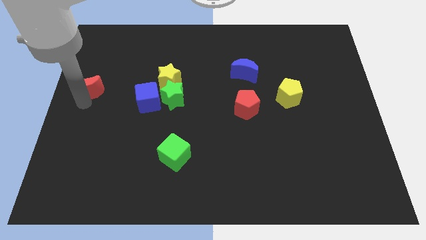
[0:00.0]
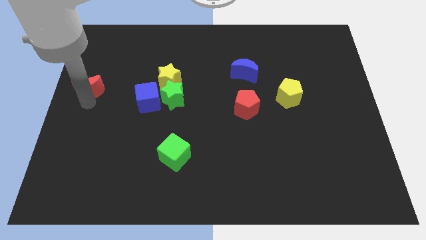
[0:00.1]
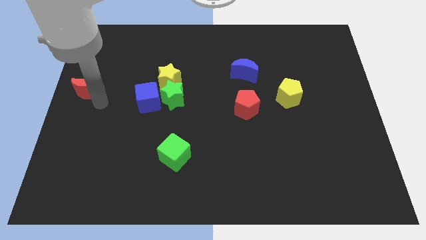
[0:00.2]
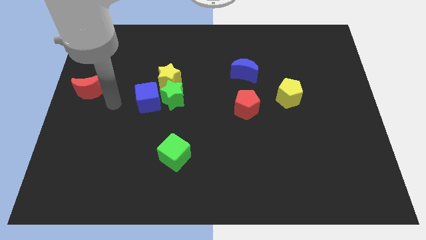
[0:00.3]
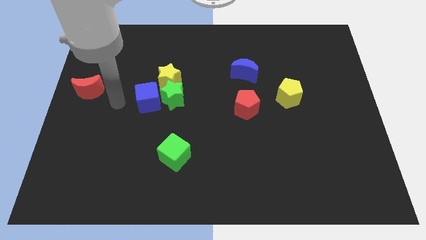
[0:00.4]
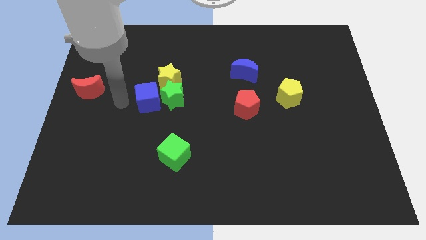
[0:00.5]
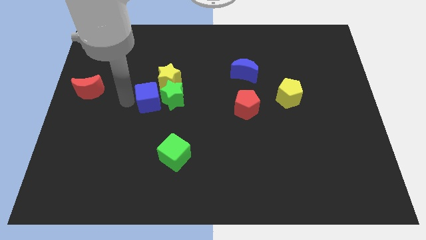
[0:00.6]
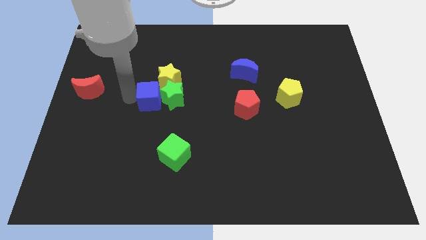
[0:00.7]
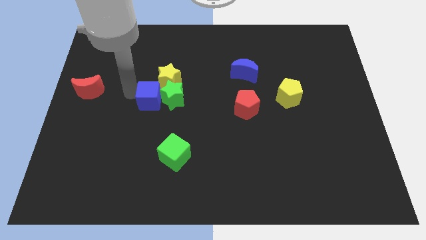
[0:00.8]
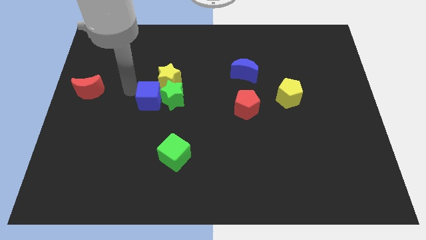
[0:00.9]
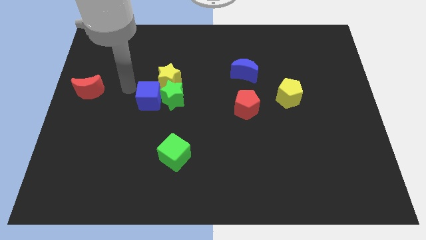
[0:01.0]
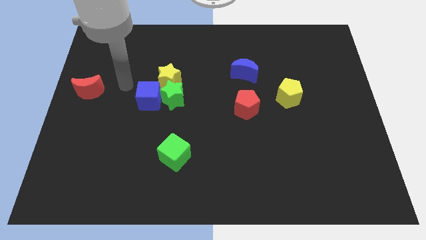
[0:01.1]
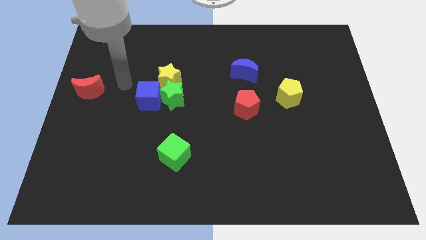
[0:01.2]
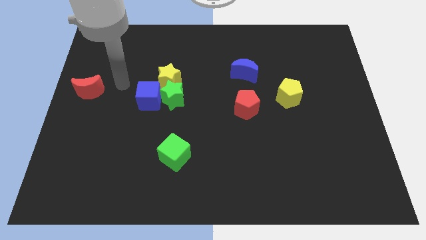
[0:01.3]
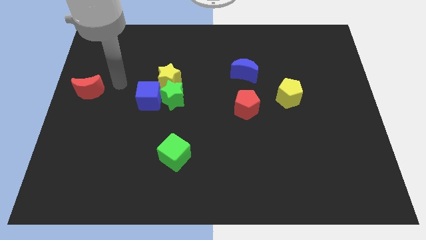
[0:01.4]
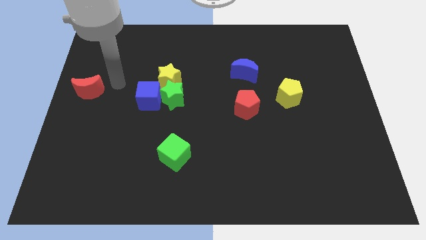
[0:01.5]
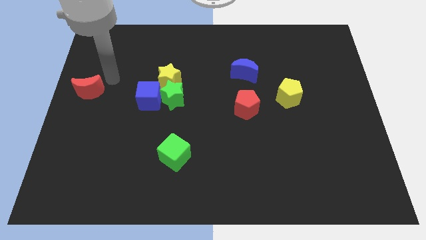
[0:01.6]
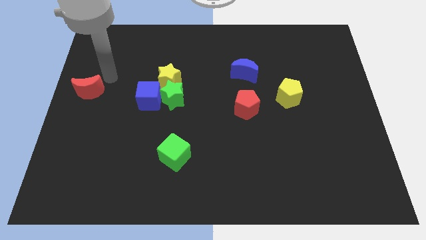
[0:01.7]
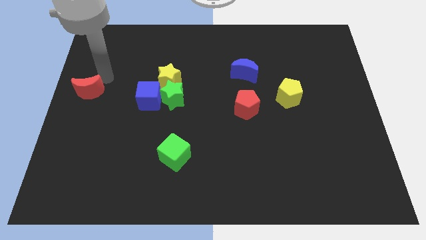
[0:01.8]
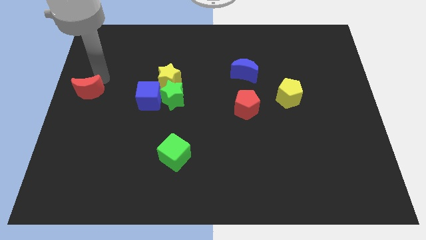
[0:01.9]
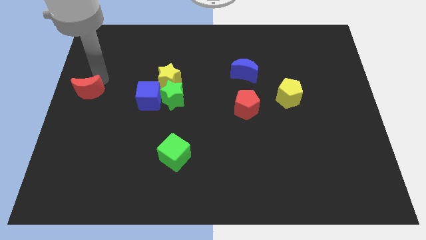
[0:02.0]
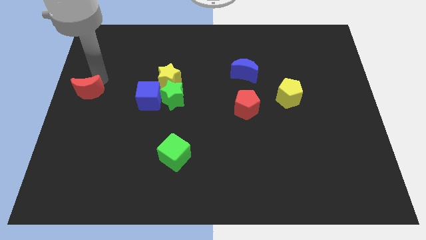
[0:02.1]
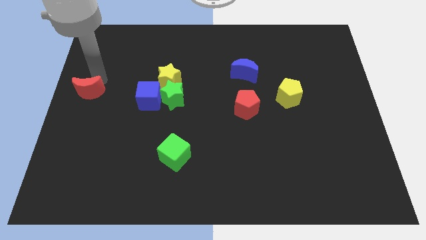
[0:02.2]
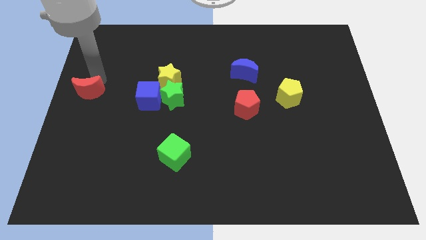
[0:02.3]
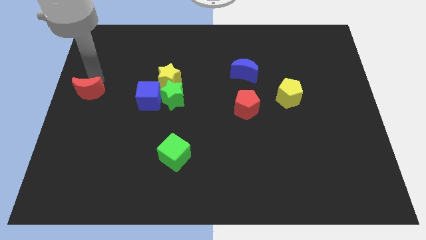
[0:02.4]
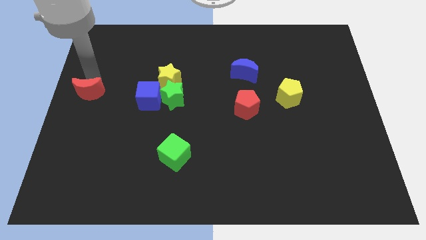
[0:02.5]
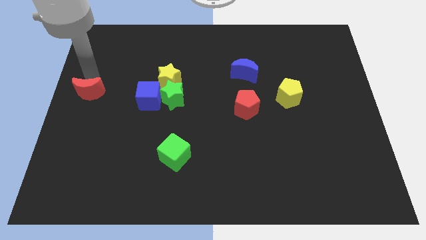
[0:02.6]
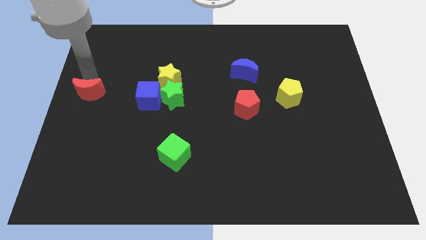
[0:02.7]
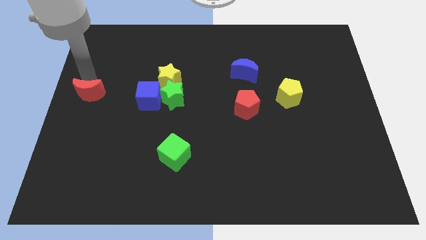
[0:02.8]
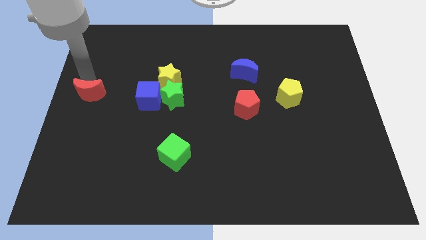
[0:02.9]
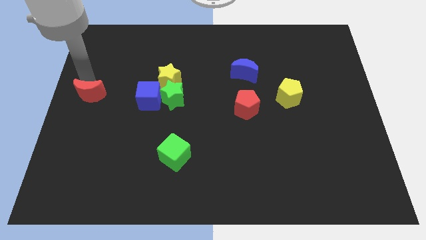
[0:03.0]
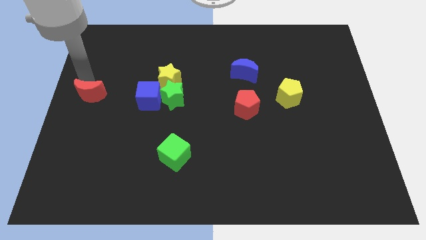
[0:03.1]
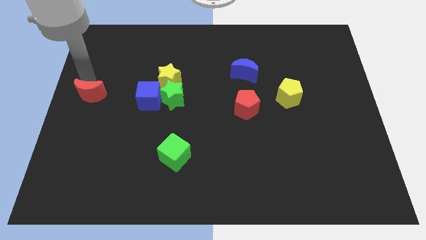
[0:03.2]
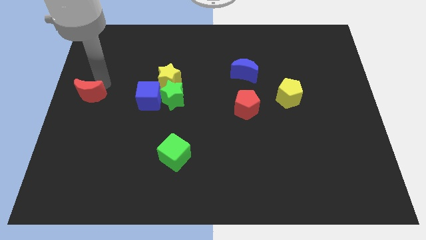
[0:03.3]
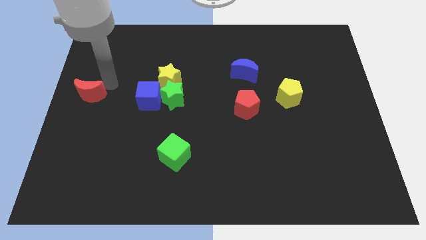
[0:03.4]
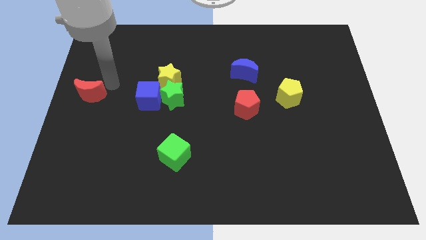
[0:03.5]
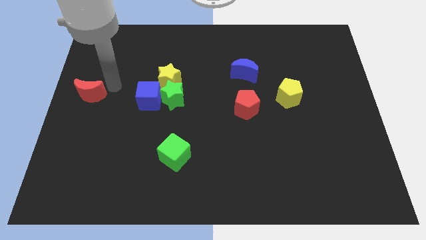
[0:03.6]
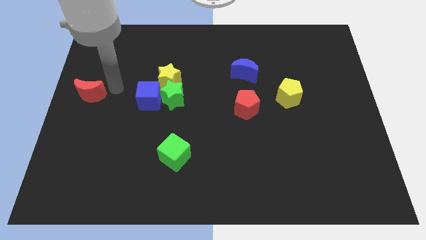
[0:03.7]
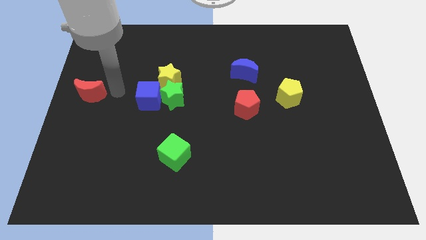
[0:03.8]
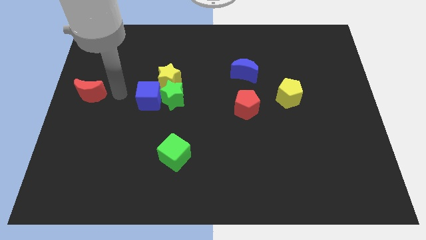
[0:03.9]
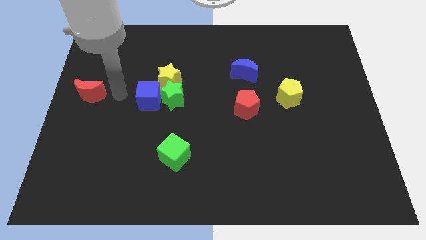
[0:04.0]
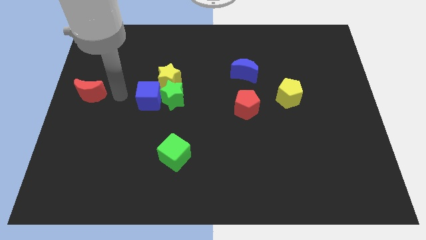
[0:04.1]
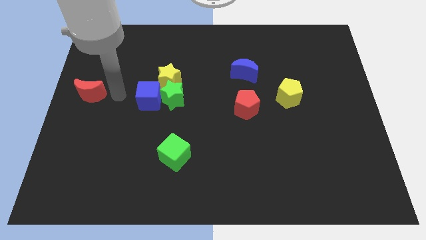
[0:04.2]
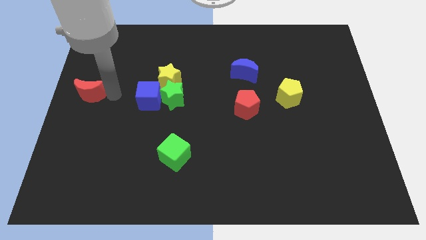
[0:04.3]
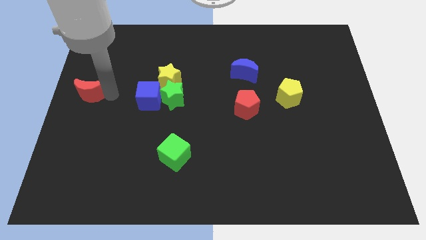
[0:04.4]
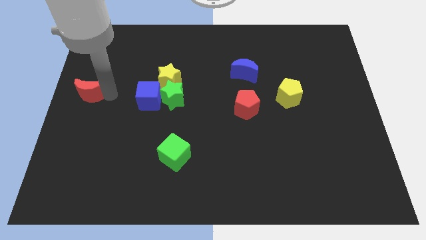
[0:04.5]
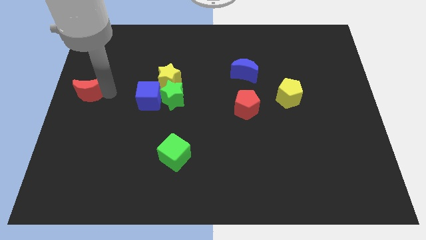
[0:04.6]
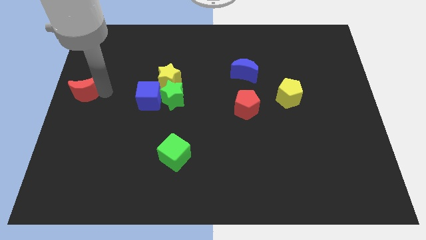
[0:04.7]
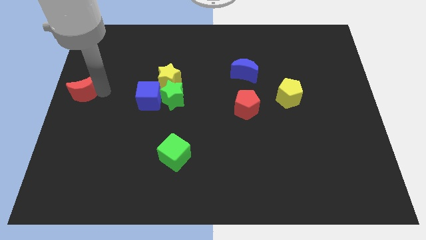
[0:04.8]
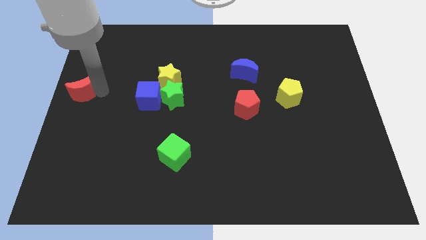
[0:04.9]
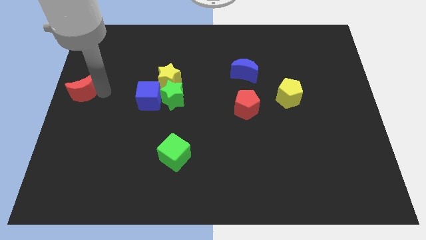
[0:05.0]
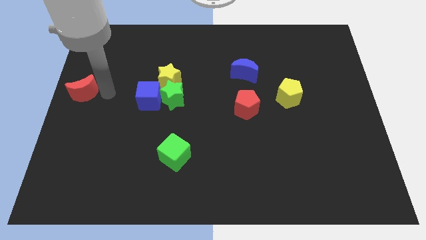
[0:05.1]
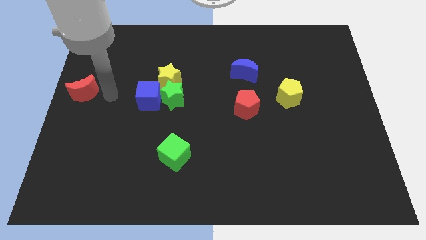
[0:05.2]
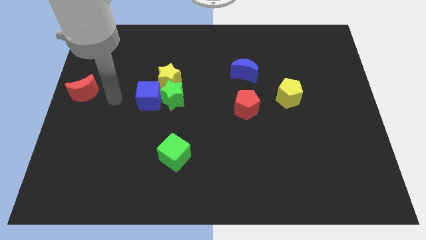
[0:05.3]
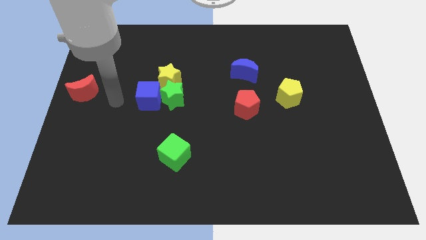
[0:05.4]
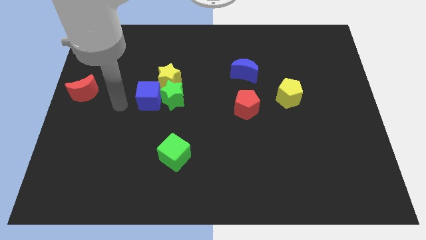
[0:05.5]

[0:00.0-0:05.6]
push the red moon parallel to blue cube

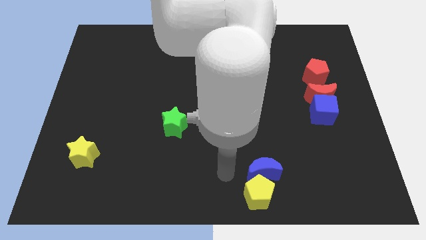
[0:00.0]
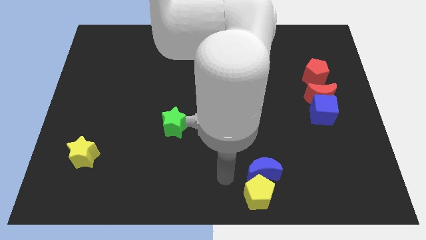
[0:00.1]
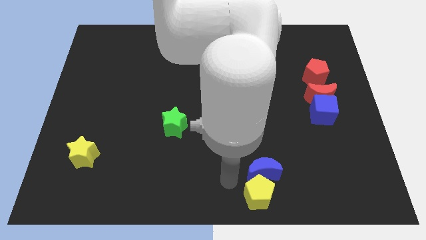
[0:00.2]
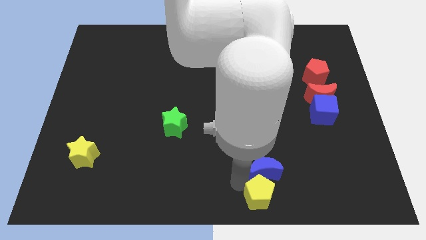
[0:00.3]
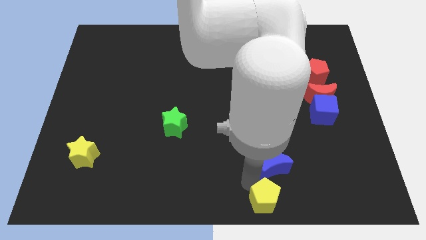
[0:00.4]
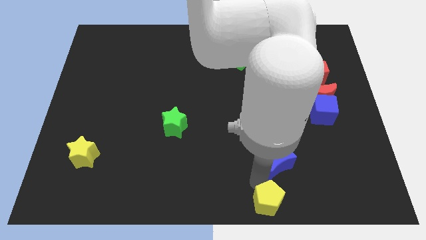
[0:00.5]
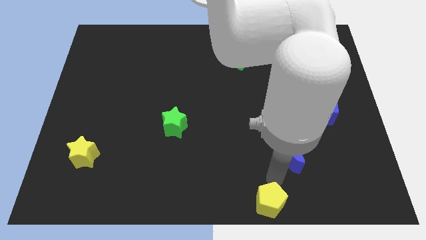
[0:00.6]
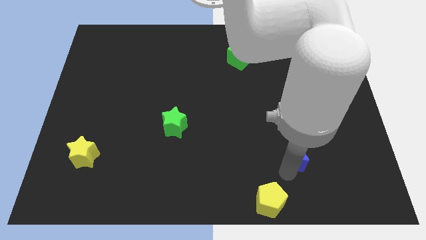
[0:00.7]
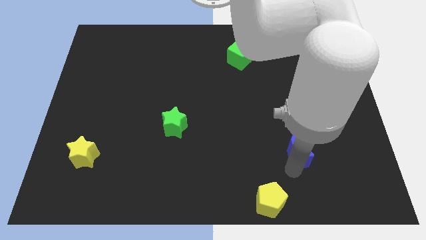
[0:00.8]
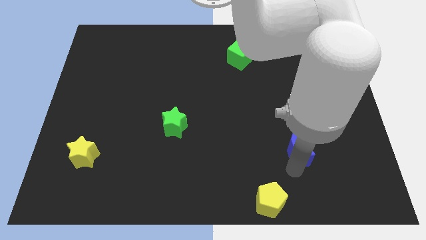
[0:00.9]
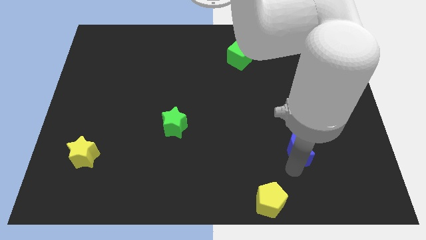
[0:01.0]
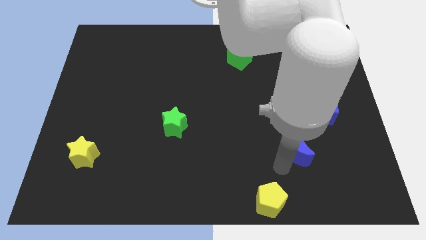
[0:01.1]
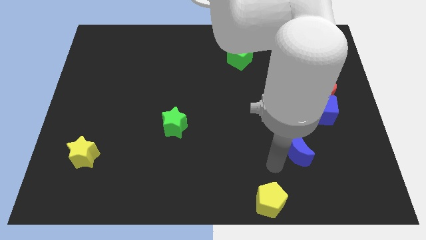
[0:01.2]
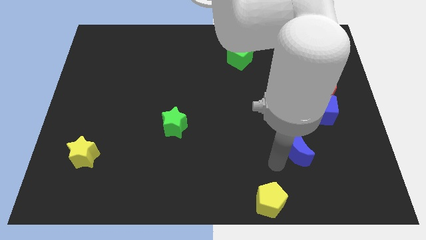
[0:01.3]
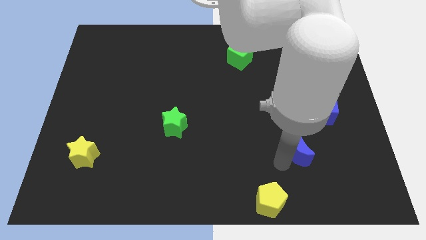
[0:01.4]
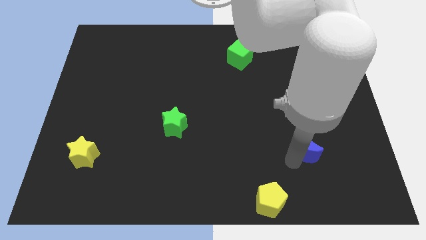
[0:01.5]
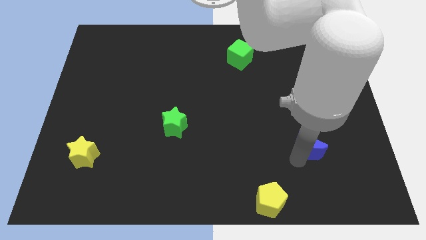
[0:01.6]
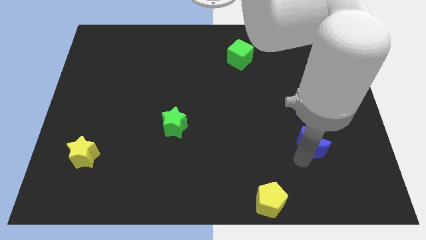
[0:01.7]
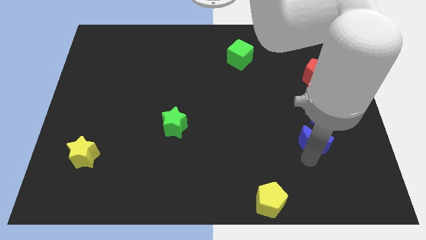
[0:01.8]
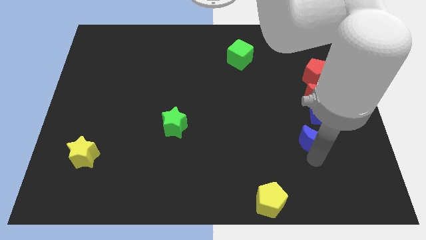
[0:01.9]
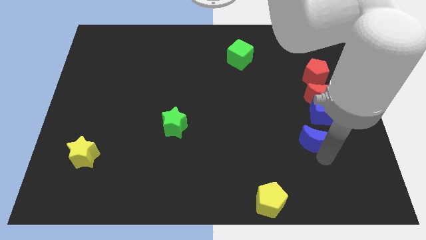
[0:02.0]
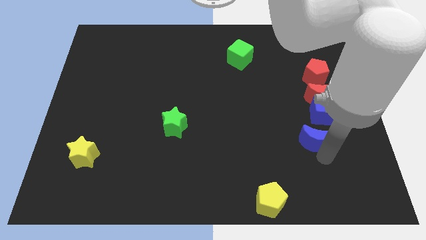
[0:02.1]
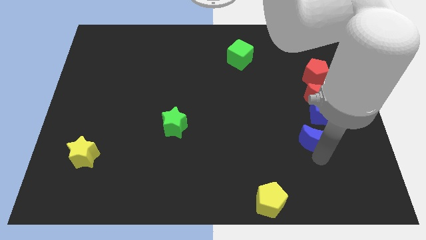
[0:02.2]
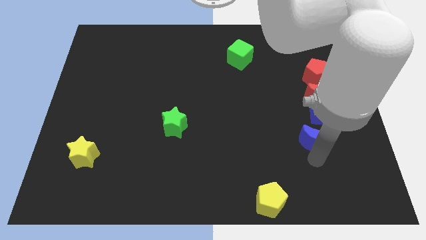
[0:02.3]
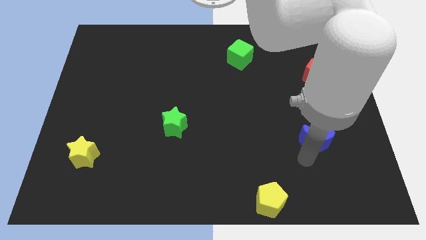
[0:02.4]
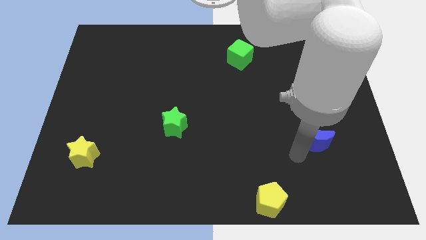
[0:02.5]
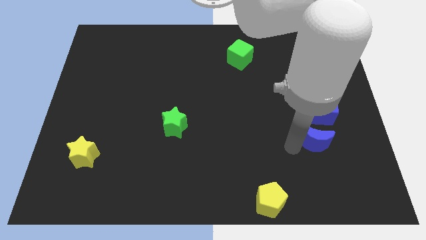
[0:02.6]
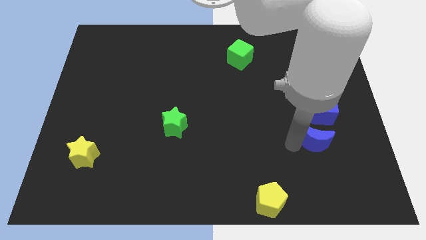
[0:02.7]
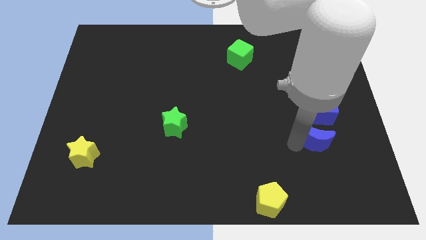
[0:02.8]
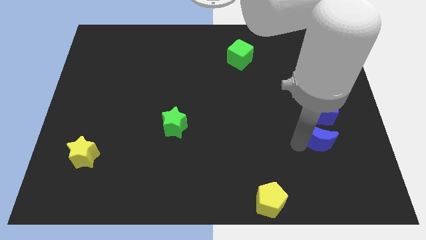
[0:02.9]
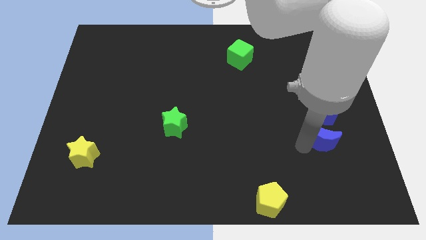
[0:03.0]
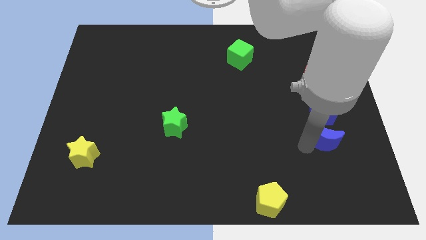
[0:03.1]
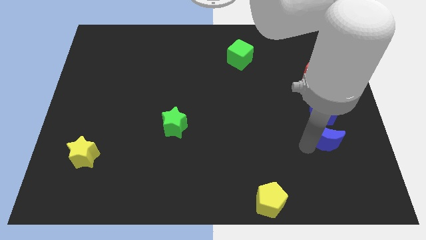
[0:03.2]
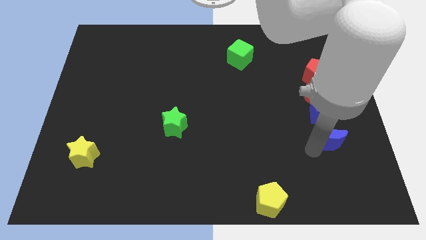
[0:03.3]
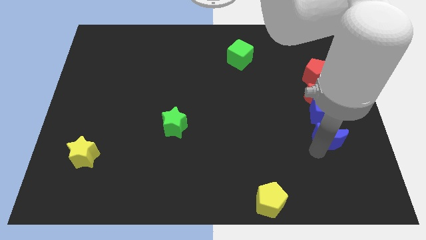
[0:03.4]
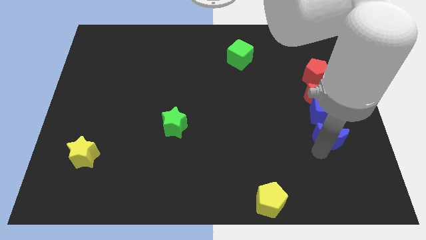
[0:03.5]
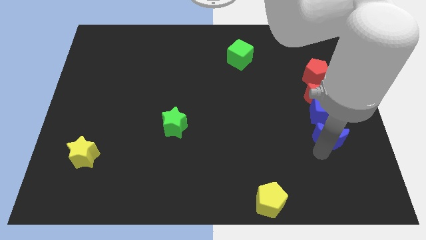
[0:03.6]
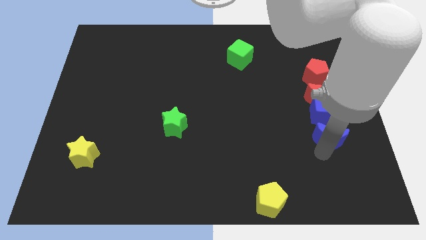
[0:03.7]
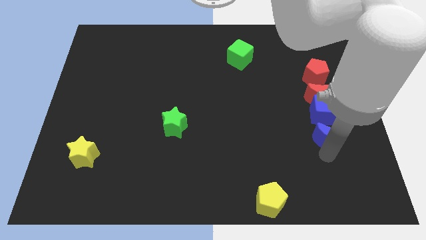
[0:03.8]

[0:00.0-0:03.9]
place the blue crescent below the blue cube
